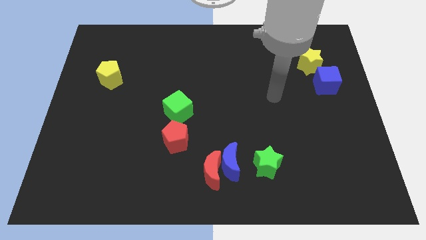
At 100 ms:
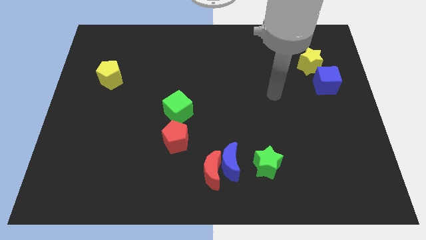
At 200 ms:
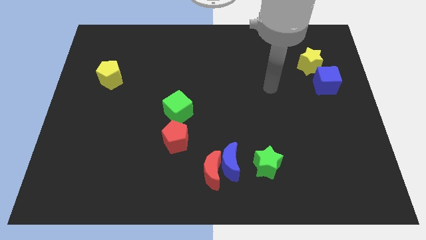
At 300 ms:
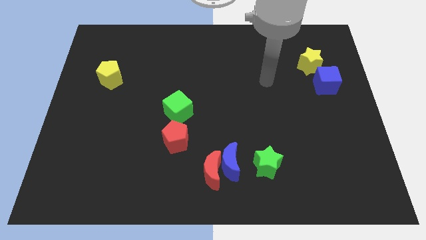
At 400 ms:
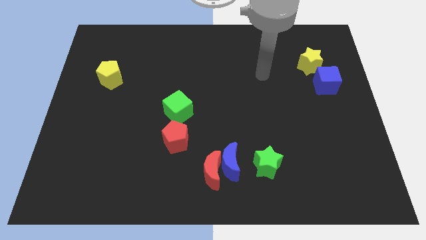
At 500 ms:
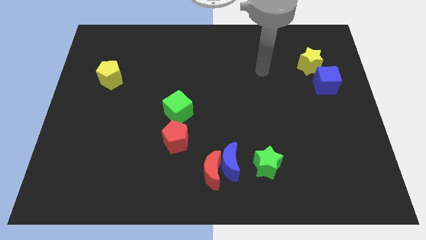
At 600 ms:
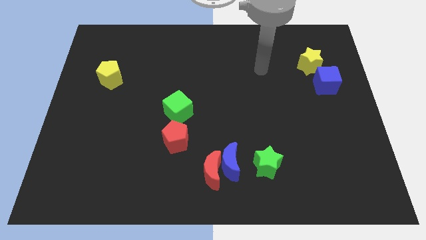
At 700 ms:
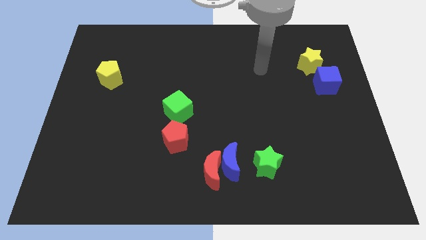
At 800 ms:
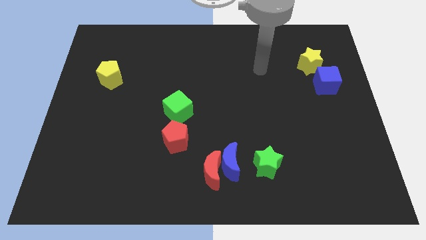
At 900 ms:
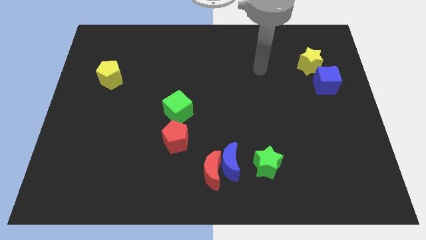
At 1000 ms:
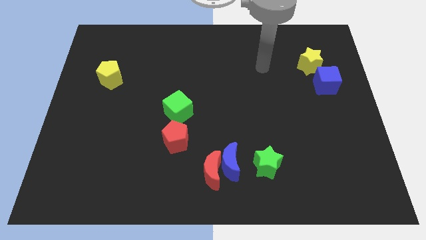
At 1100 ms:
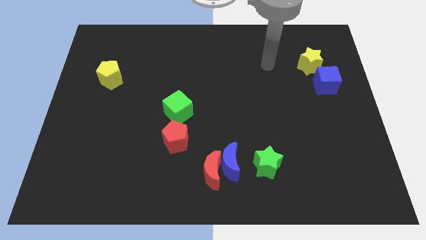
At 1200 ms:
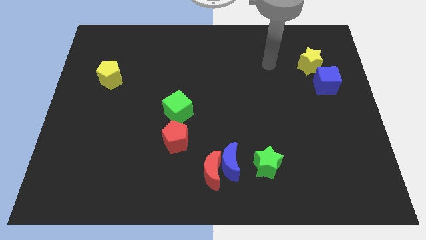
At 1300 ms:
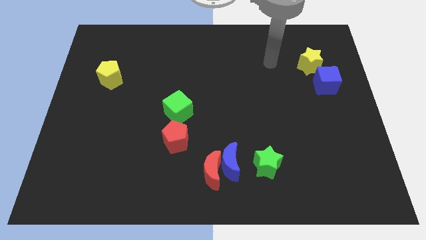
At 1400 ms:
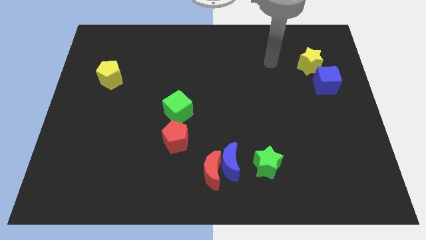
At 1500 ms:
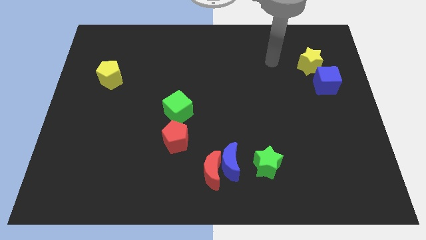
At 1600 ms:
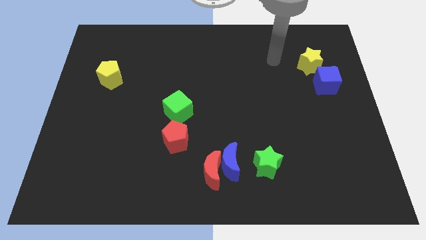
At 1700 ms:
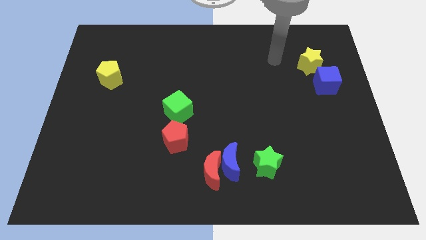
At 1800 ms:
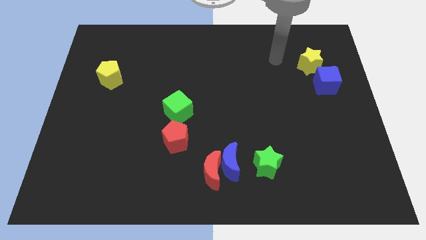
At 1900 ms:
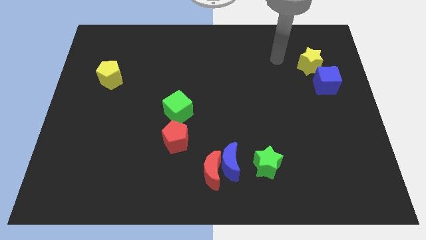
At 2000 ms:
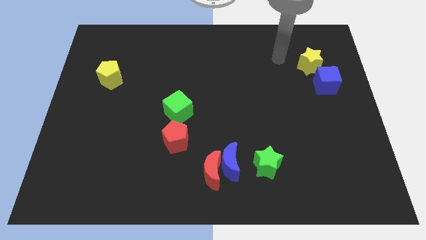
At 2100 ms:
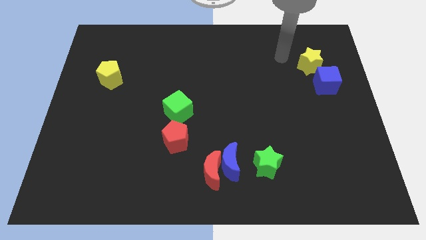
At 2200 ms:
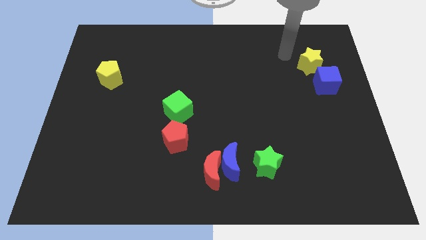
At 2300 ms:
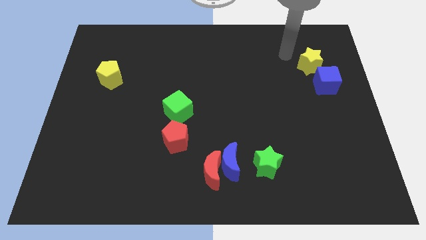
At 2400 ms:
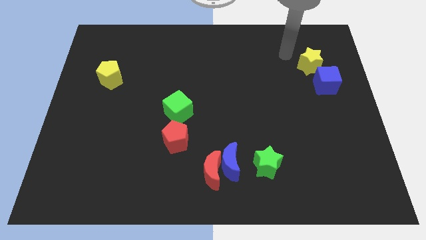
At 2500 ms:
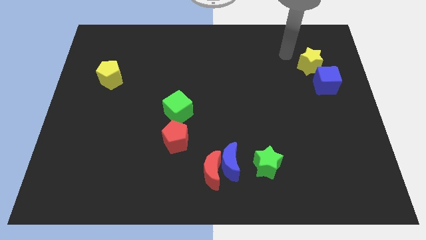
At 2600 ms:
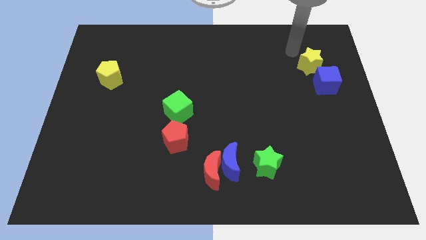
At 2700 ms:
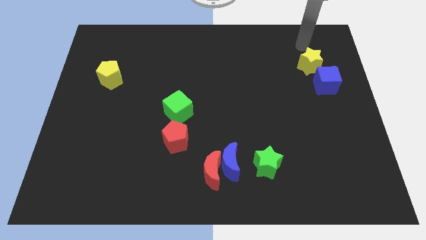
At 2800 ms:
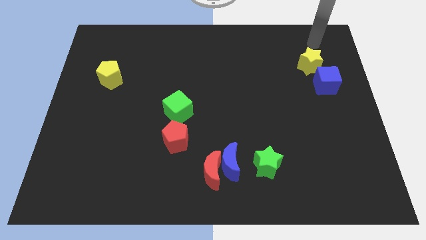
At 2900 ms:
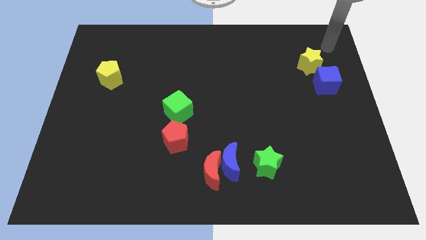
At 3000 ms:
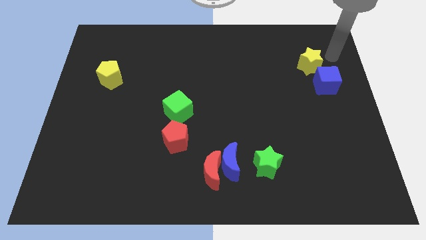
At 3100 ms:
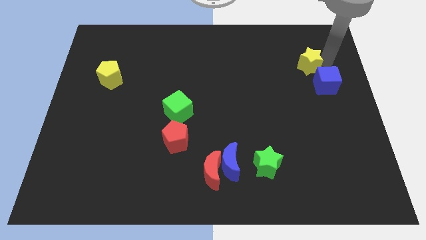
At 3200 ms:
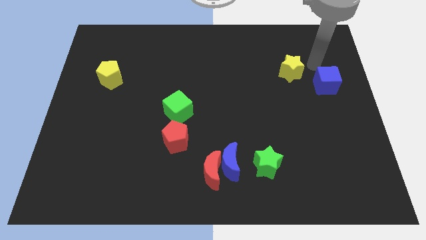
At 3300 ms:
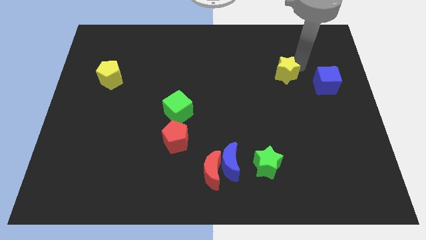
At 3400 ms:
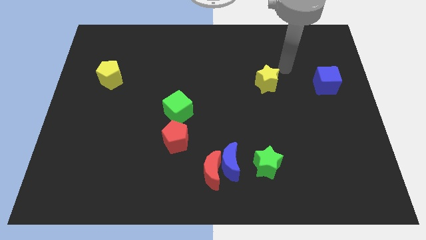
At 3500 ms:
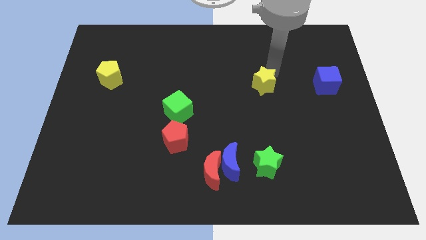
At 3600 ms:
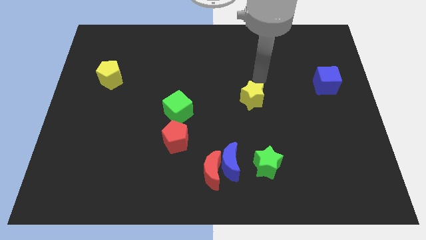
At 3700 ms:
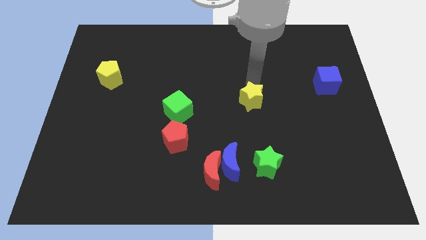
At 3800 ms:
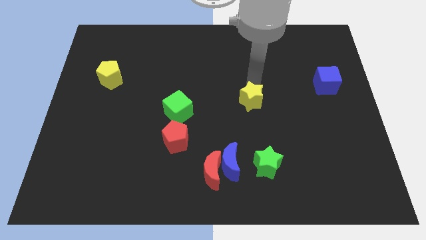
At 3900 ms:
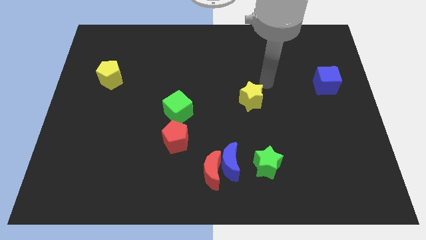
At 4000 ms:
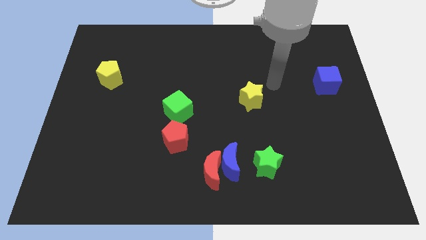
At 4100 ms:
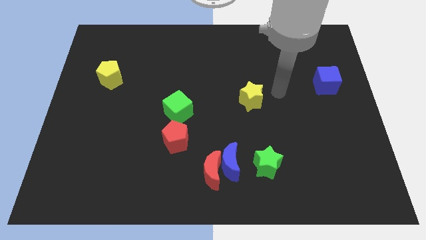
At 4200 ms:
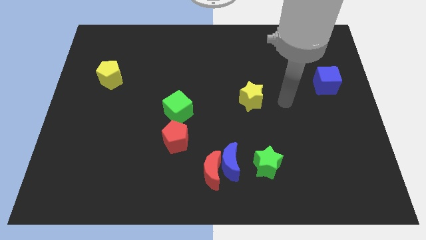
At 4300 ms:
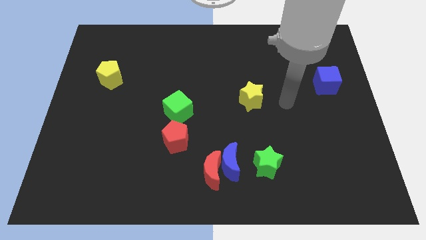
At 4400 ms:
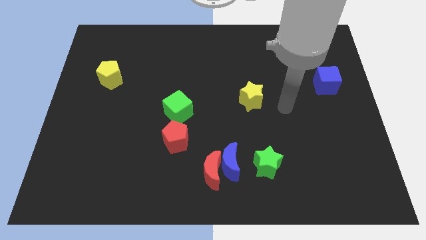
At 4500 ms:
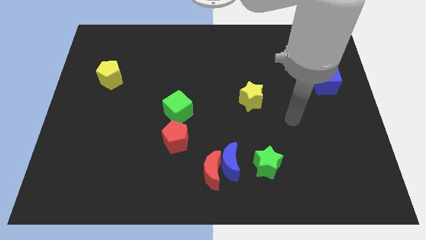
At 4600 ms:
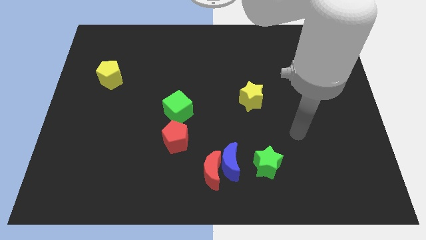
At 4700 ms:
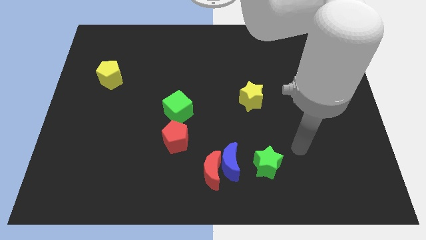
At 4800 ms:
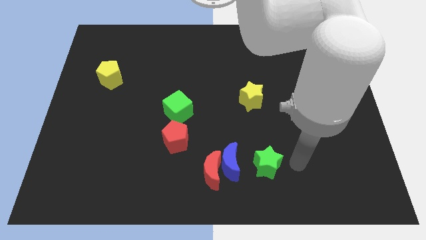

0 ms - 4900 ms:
place the yellow star vertically above the green star

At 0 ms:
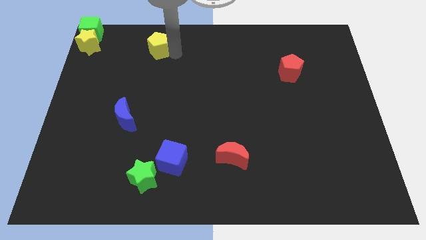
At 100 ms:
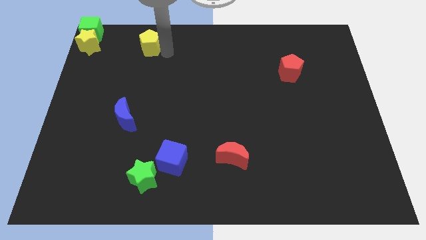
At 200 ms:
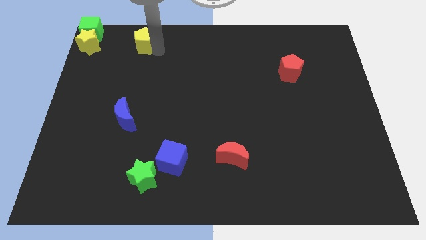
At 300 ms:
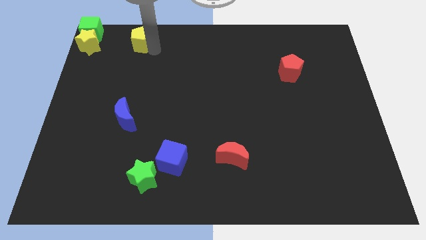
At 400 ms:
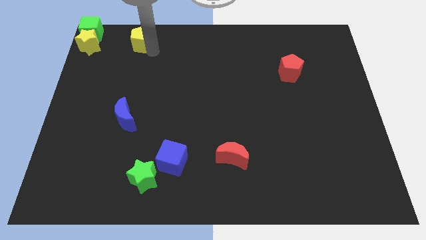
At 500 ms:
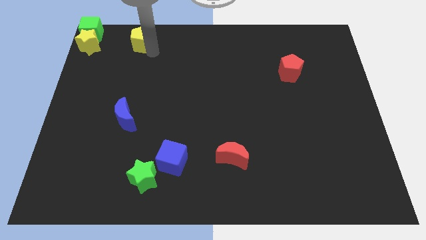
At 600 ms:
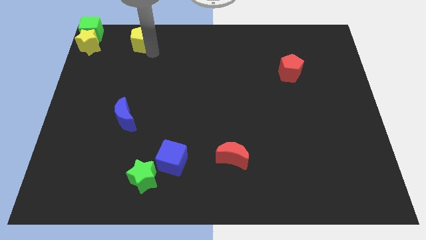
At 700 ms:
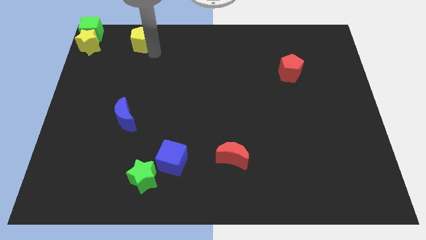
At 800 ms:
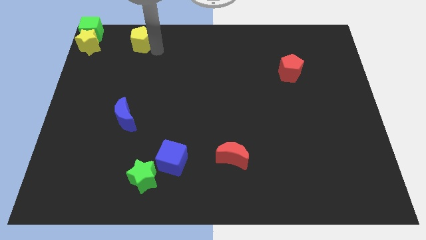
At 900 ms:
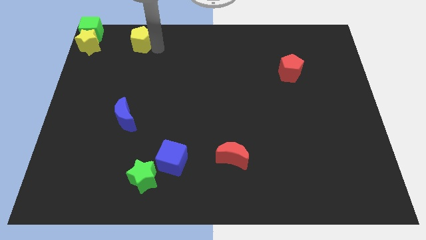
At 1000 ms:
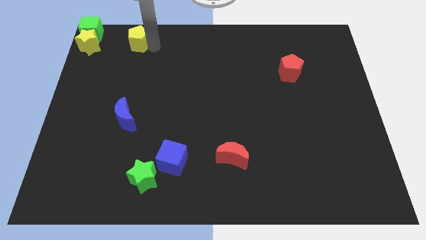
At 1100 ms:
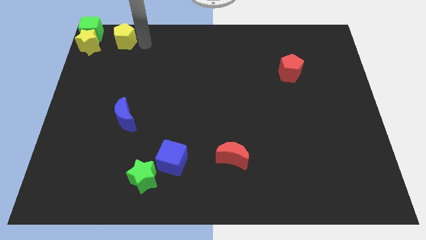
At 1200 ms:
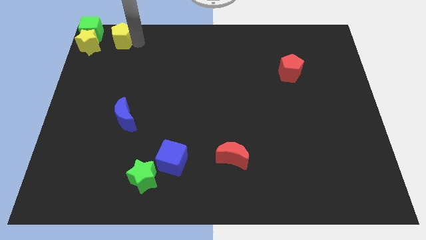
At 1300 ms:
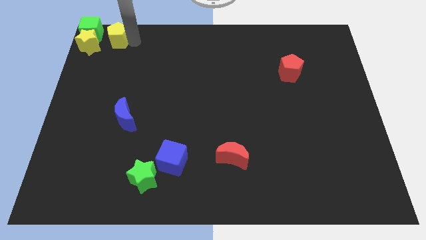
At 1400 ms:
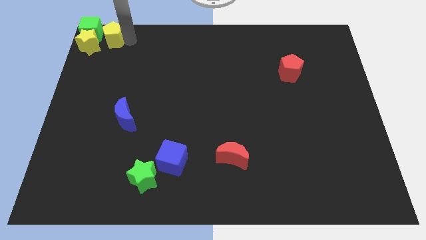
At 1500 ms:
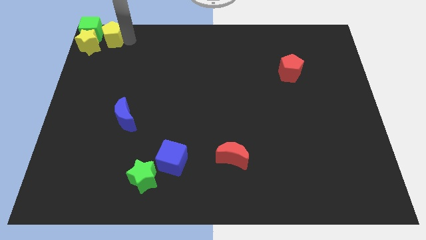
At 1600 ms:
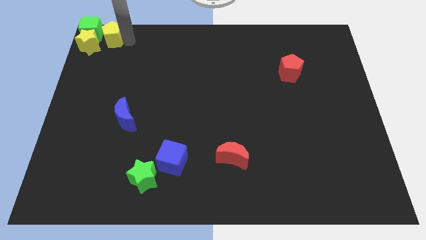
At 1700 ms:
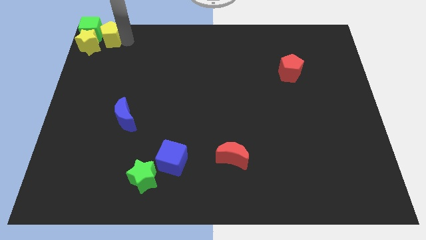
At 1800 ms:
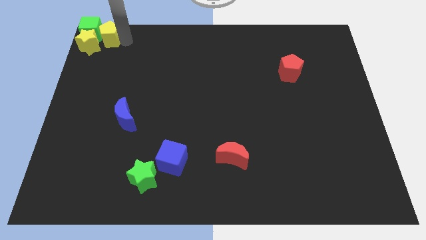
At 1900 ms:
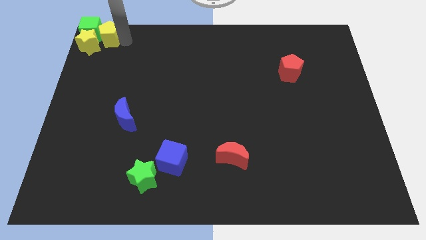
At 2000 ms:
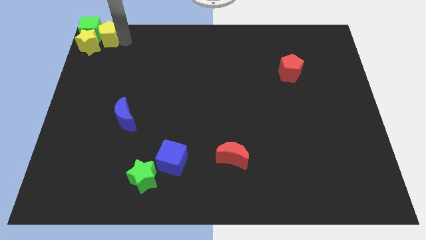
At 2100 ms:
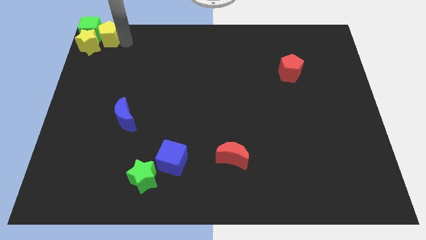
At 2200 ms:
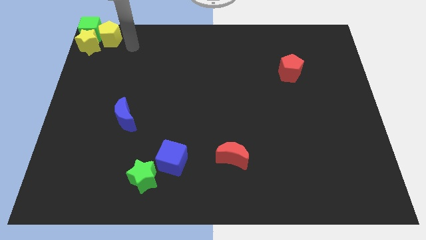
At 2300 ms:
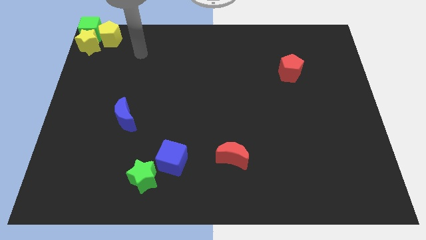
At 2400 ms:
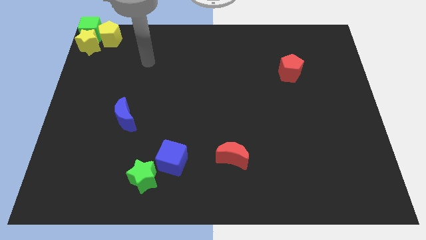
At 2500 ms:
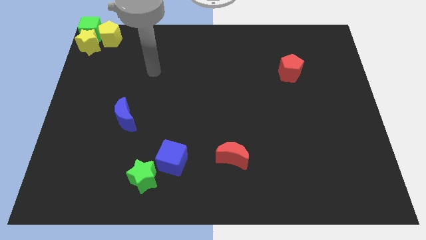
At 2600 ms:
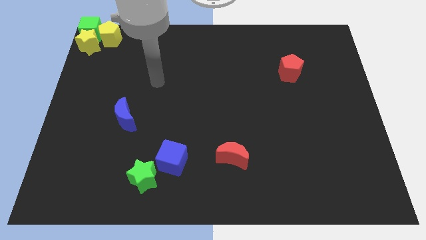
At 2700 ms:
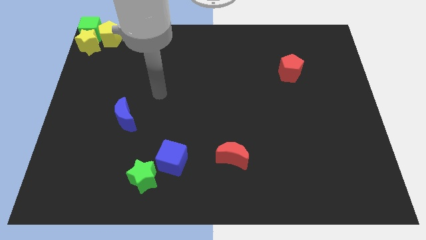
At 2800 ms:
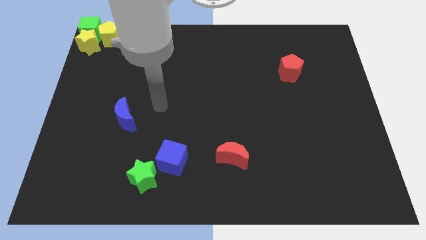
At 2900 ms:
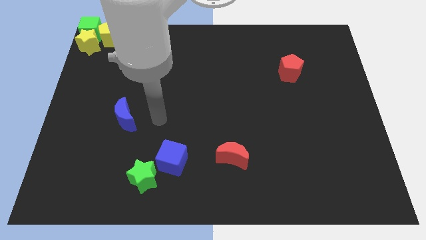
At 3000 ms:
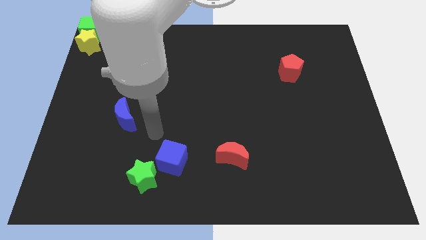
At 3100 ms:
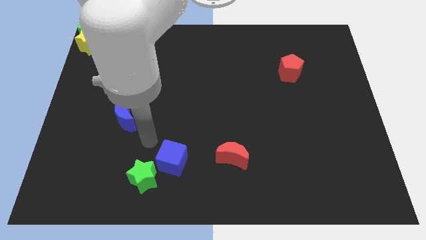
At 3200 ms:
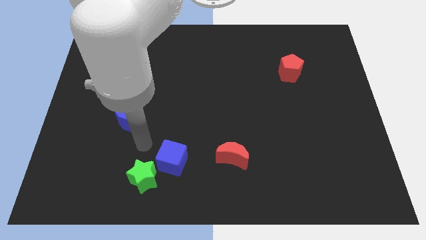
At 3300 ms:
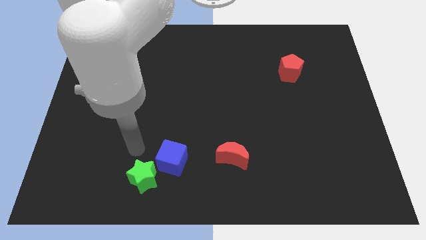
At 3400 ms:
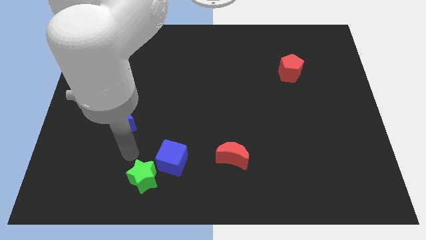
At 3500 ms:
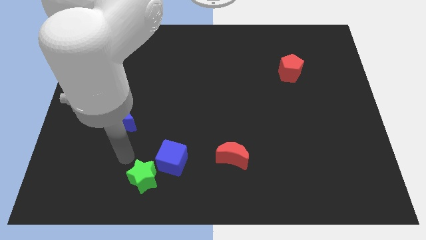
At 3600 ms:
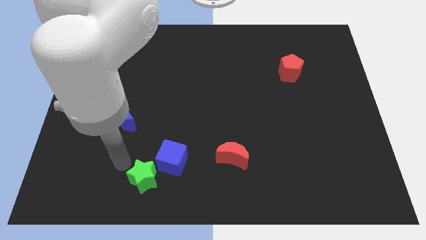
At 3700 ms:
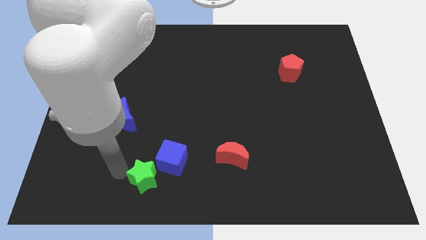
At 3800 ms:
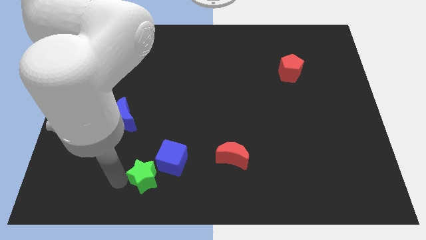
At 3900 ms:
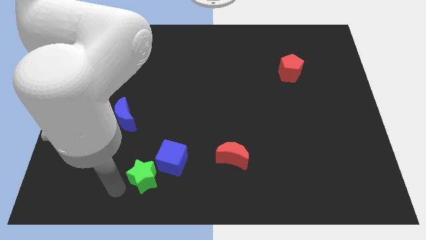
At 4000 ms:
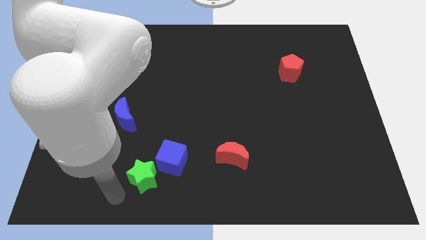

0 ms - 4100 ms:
move the yellow pentagon at the top left corner

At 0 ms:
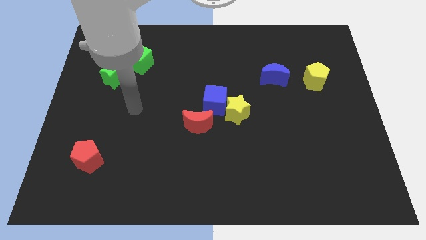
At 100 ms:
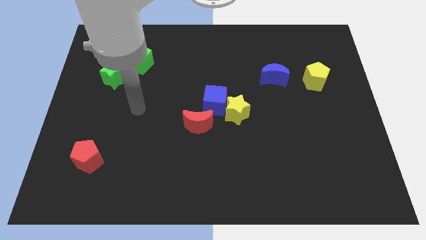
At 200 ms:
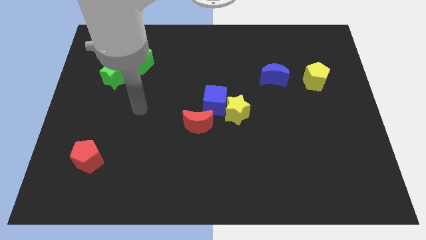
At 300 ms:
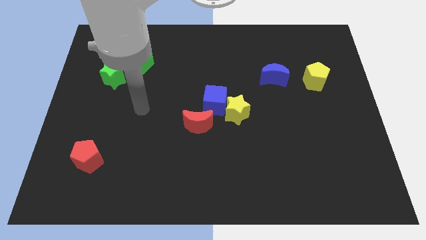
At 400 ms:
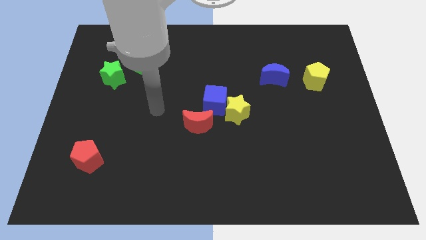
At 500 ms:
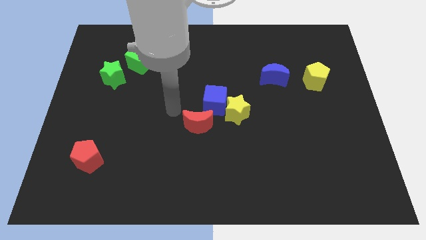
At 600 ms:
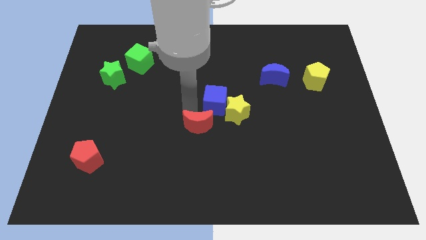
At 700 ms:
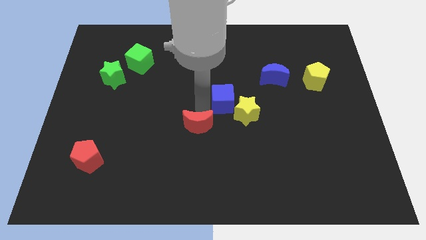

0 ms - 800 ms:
tap the blue block
